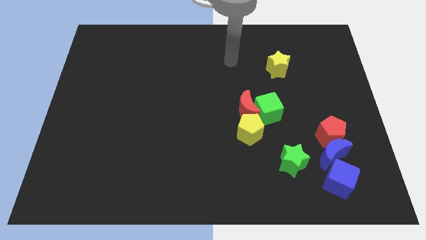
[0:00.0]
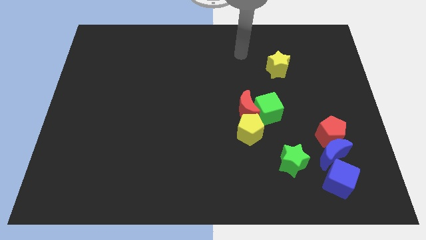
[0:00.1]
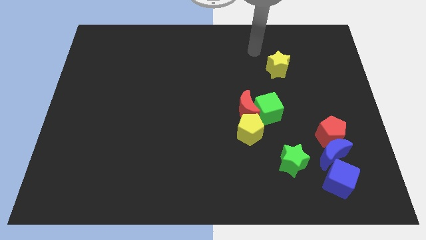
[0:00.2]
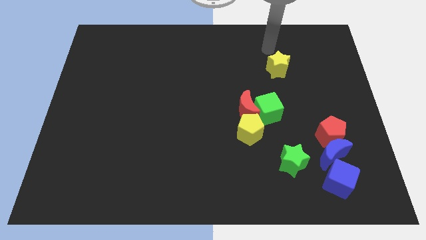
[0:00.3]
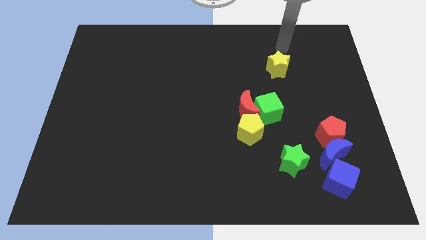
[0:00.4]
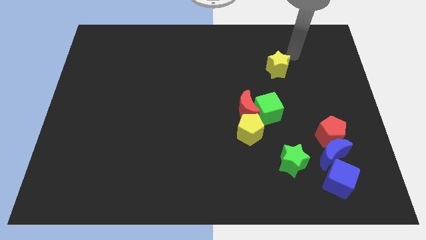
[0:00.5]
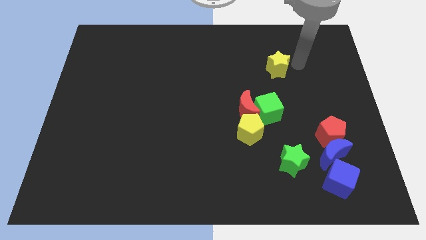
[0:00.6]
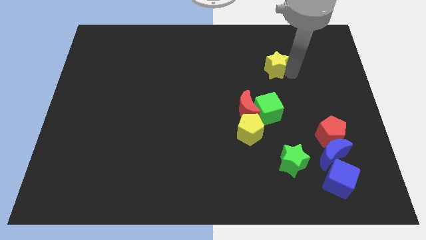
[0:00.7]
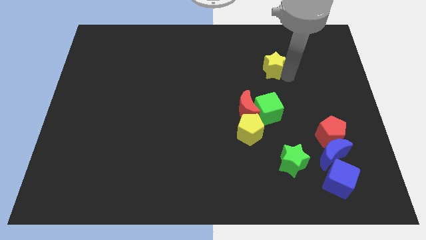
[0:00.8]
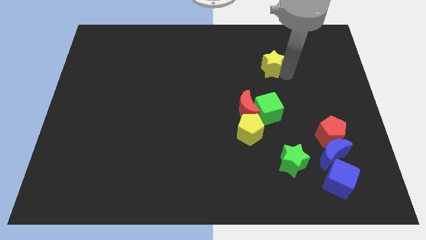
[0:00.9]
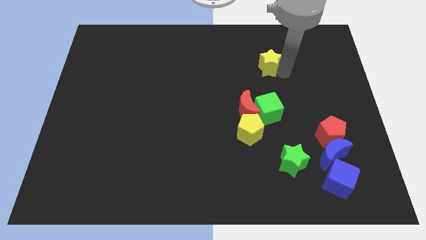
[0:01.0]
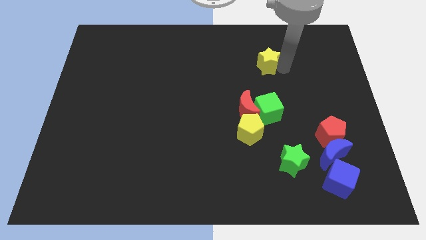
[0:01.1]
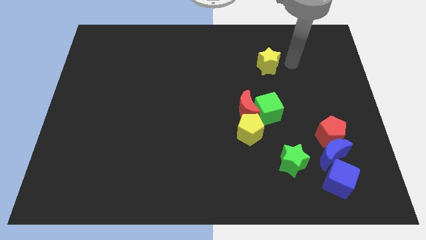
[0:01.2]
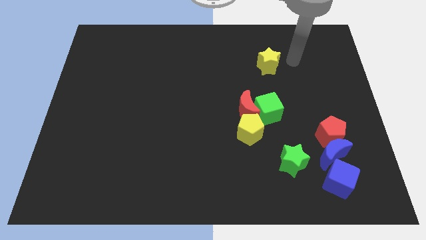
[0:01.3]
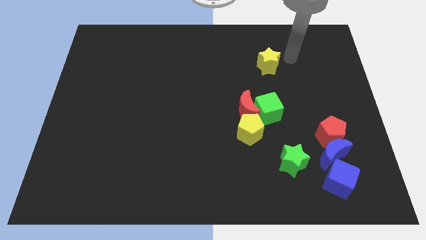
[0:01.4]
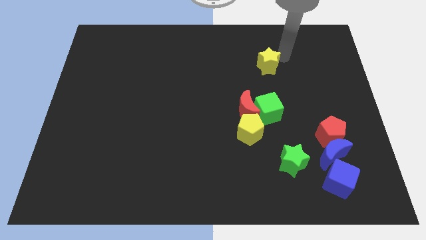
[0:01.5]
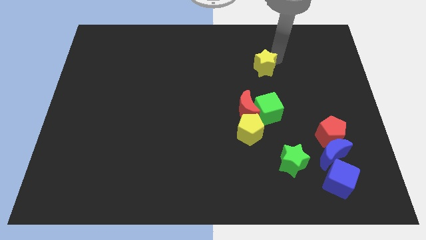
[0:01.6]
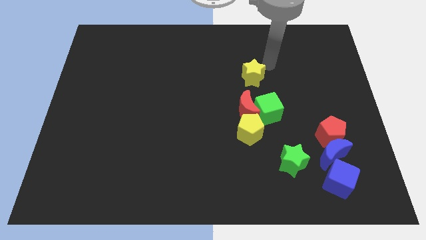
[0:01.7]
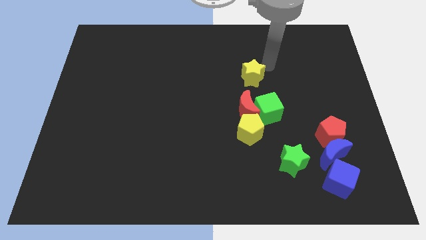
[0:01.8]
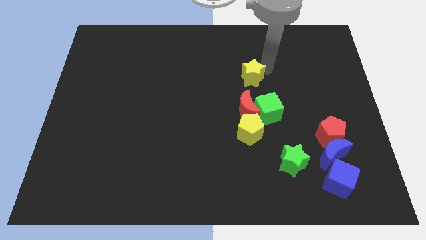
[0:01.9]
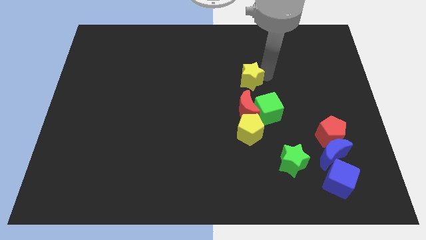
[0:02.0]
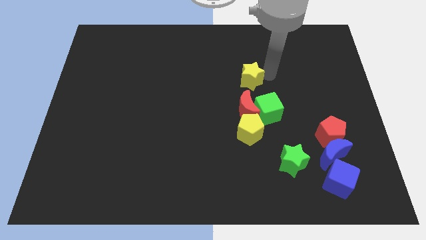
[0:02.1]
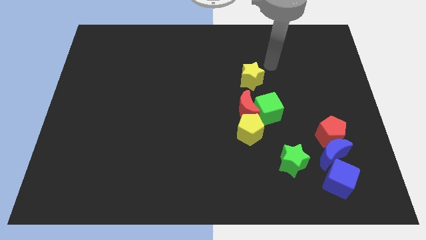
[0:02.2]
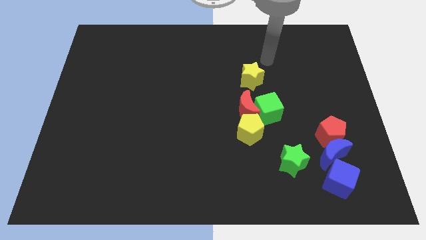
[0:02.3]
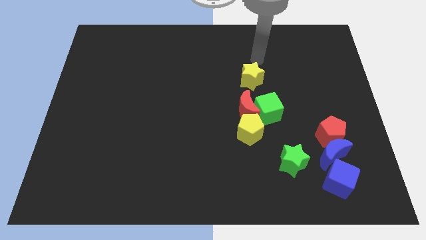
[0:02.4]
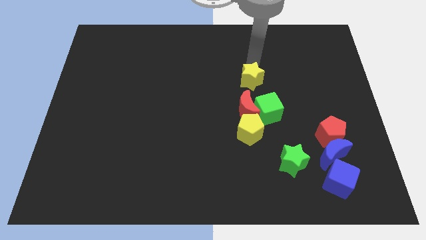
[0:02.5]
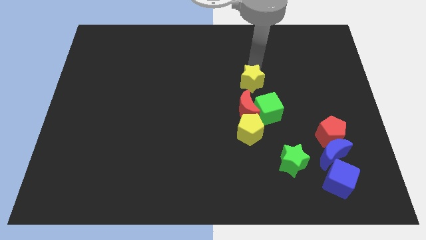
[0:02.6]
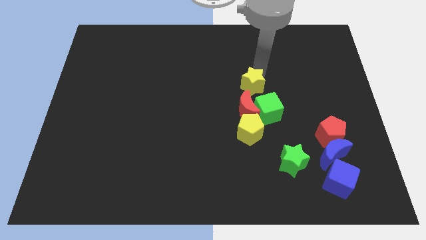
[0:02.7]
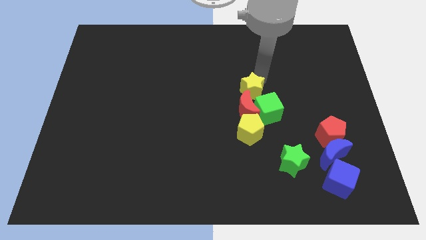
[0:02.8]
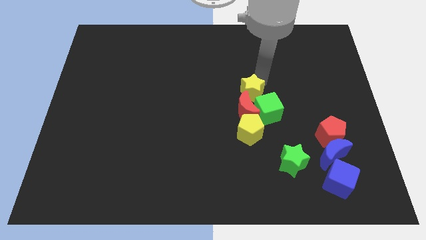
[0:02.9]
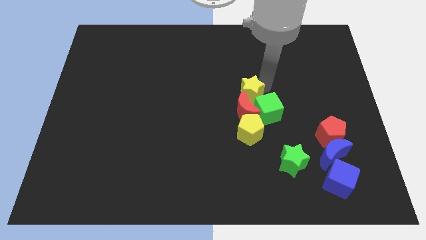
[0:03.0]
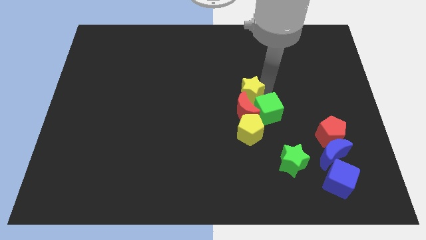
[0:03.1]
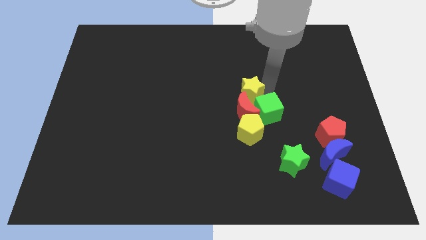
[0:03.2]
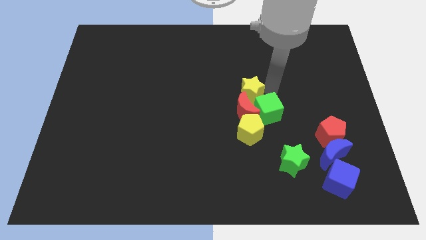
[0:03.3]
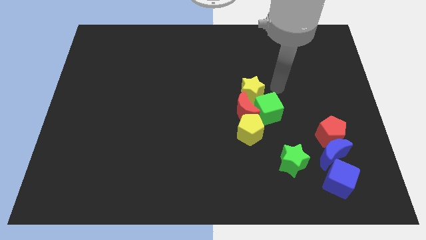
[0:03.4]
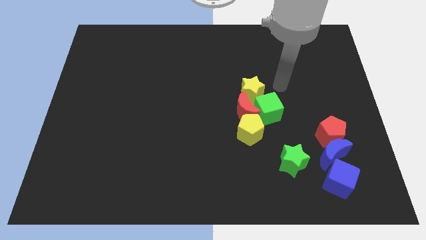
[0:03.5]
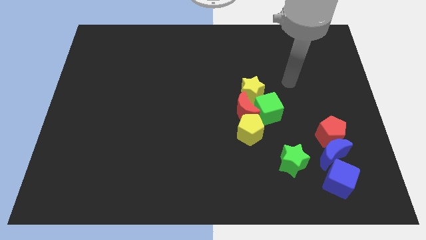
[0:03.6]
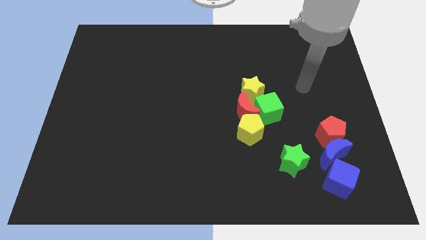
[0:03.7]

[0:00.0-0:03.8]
drag the yellow star above the red moon

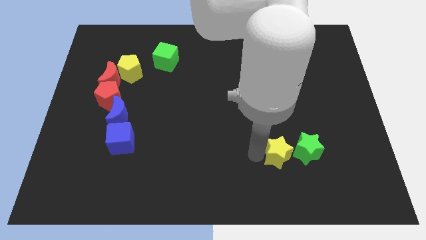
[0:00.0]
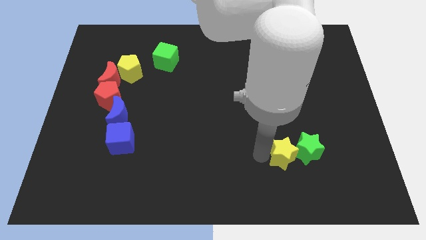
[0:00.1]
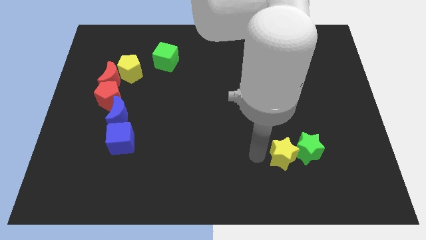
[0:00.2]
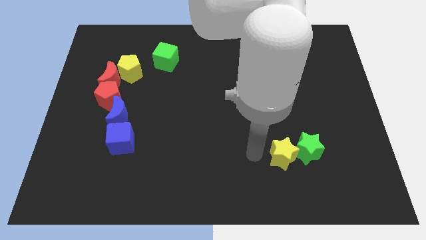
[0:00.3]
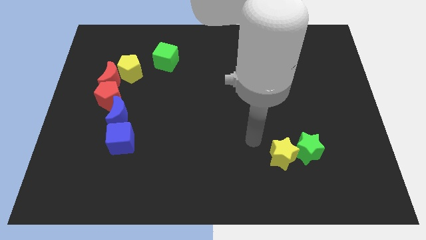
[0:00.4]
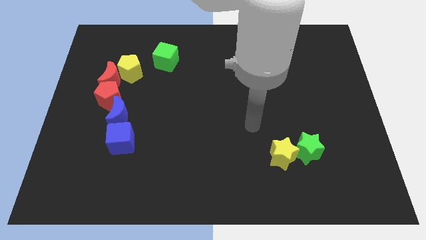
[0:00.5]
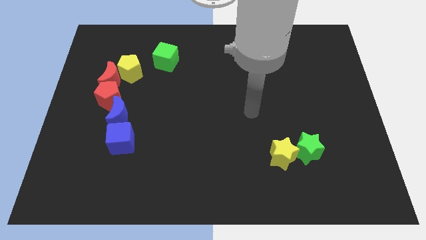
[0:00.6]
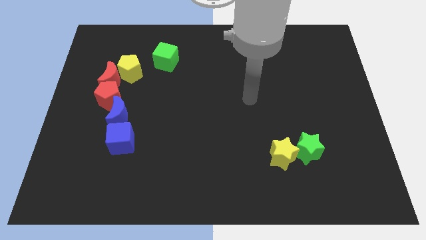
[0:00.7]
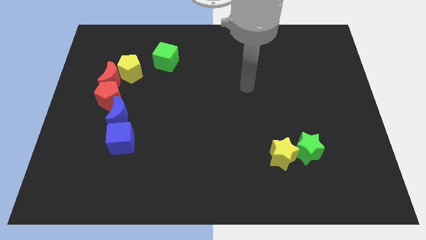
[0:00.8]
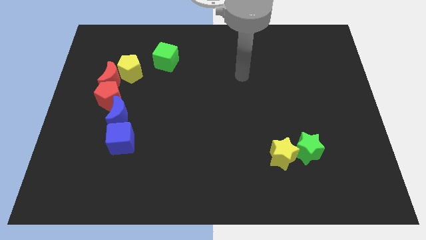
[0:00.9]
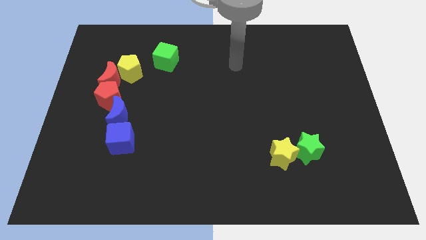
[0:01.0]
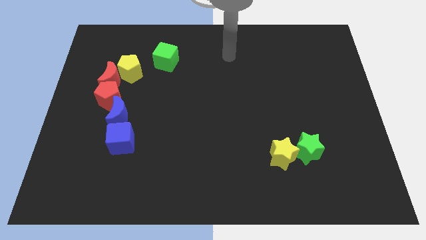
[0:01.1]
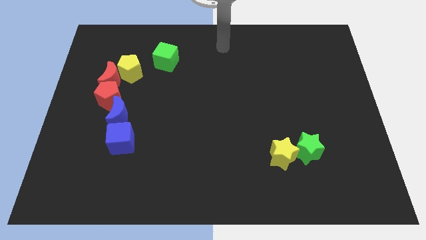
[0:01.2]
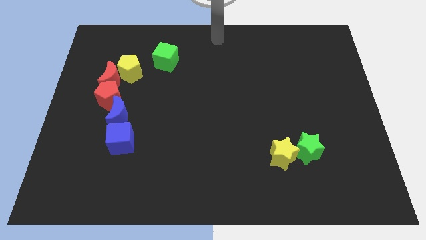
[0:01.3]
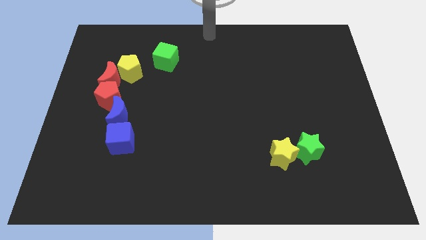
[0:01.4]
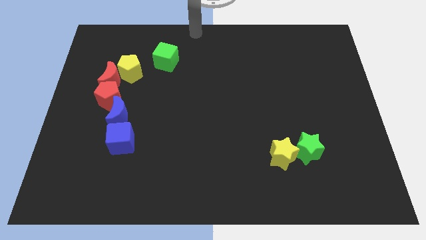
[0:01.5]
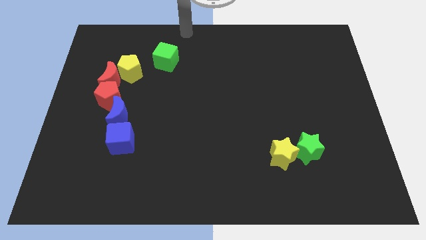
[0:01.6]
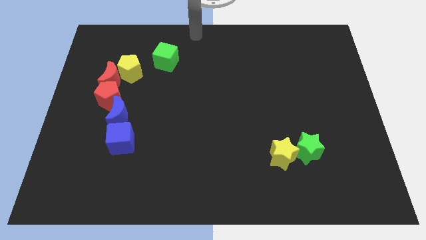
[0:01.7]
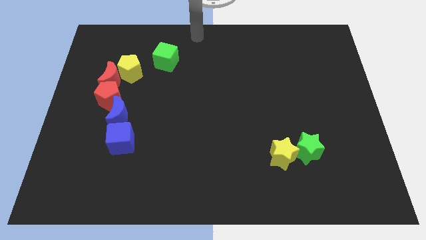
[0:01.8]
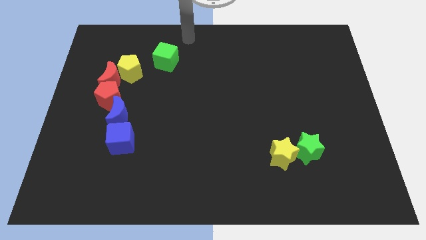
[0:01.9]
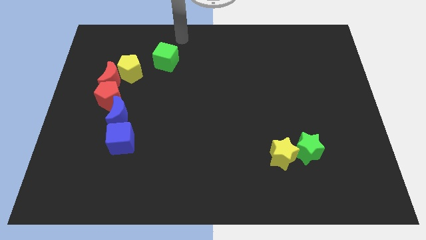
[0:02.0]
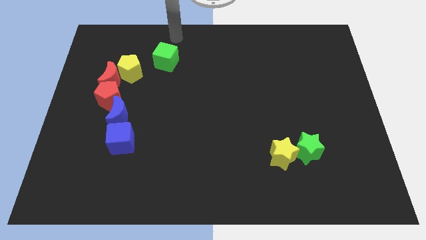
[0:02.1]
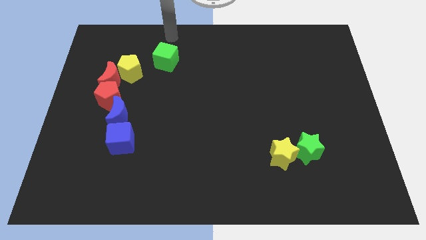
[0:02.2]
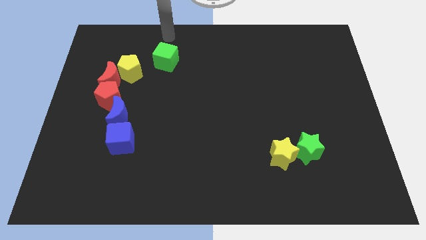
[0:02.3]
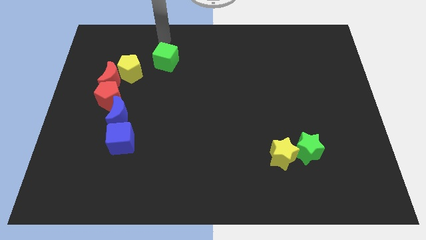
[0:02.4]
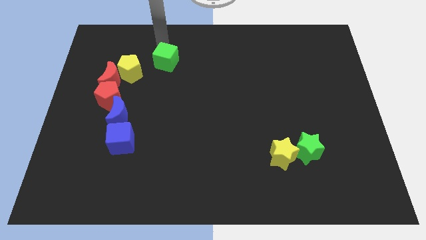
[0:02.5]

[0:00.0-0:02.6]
move the arm away from the yellow star

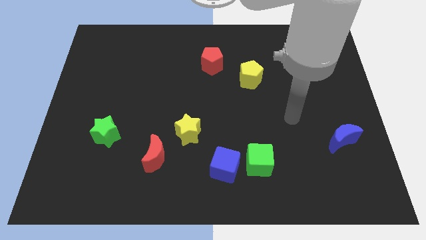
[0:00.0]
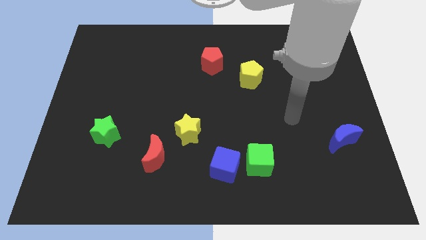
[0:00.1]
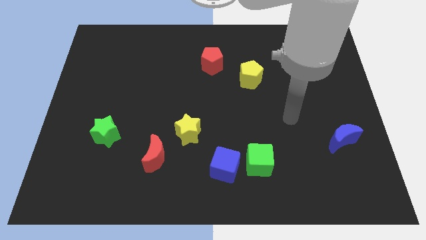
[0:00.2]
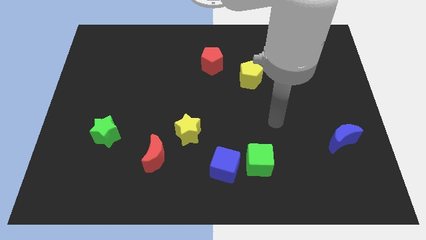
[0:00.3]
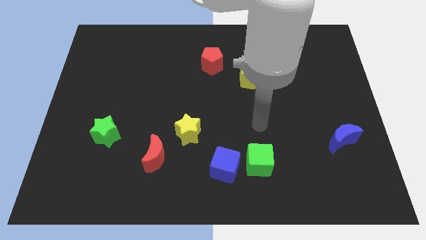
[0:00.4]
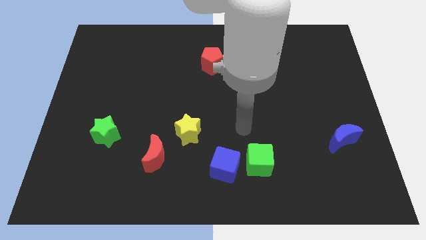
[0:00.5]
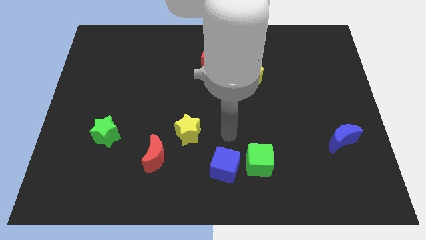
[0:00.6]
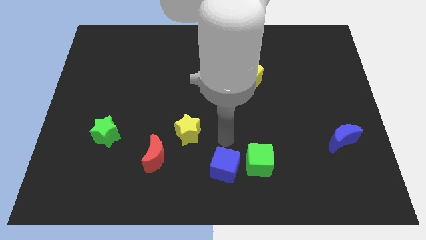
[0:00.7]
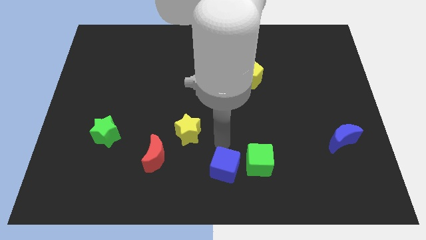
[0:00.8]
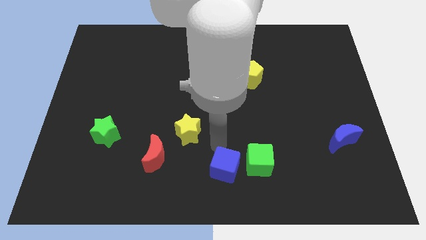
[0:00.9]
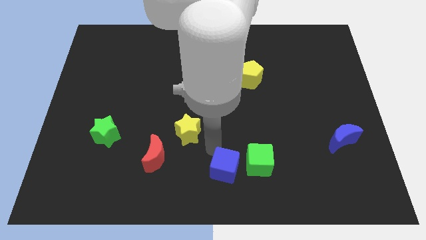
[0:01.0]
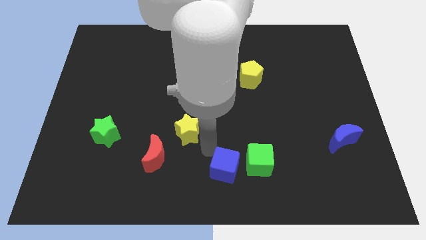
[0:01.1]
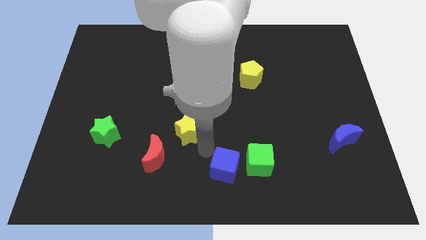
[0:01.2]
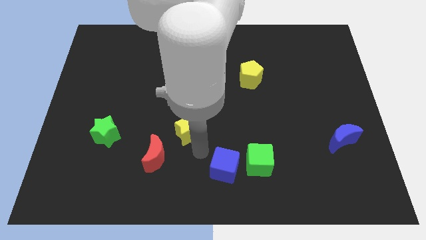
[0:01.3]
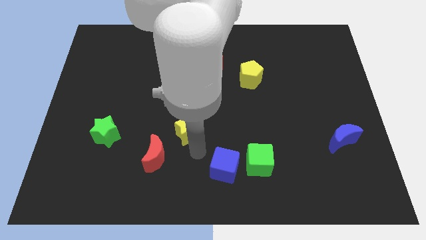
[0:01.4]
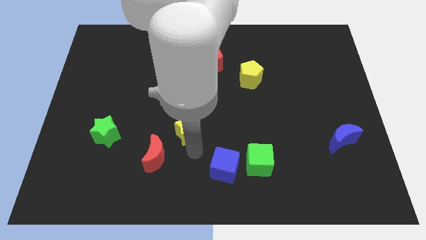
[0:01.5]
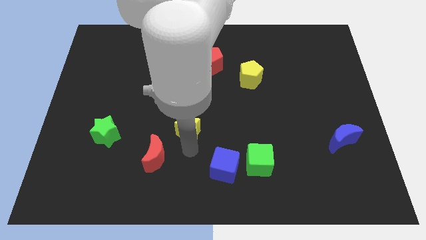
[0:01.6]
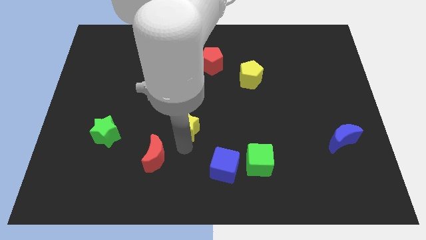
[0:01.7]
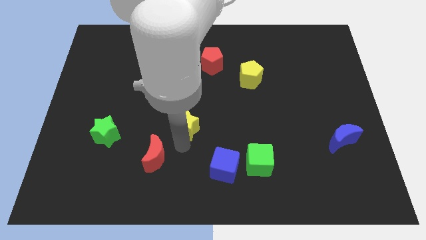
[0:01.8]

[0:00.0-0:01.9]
tap at the bottom of the yellow star

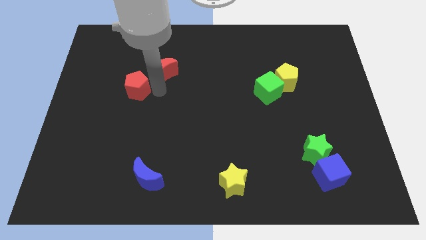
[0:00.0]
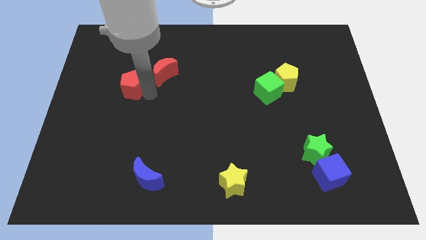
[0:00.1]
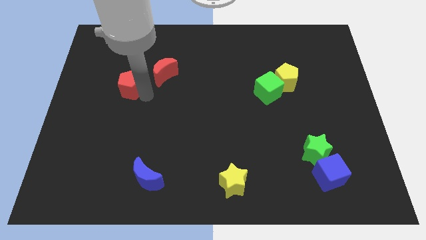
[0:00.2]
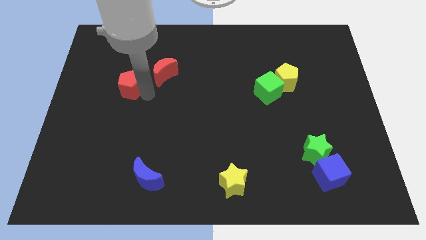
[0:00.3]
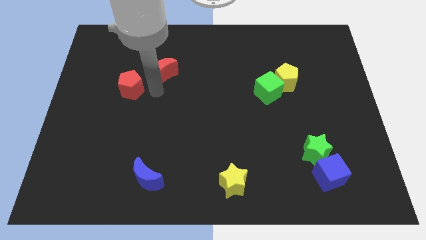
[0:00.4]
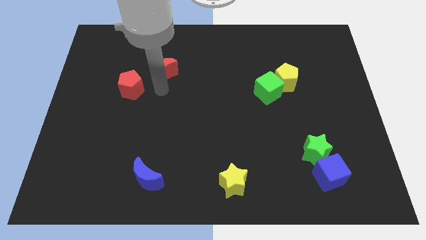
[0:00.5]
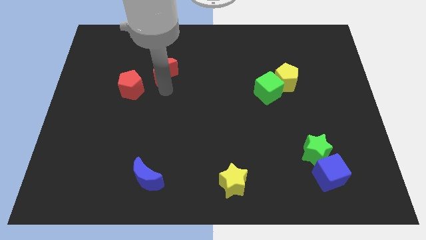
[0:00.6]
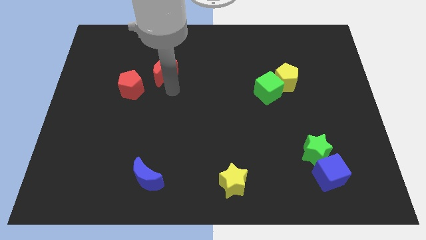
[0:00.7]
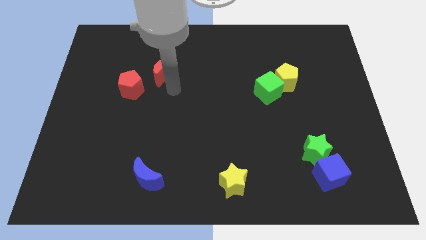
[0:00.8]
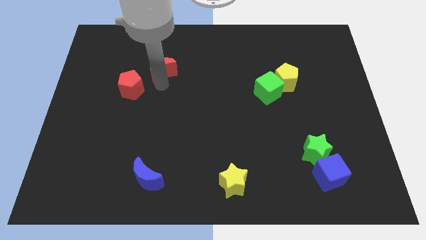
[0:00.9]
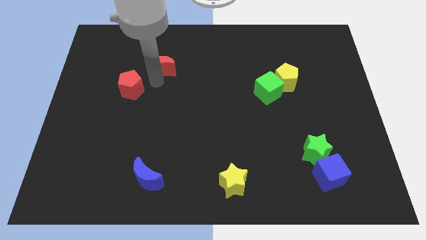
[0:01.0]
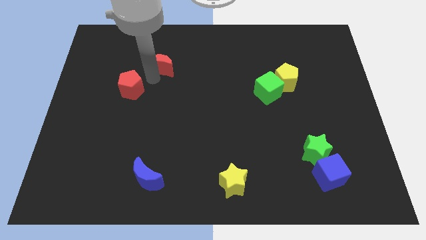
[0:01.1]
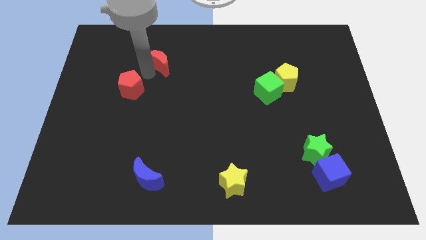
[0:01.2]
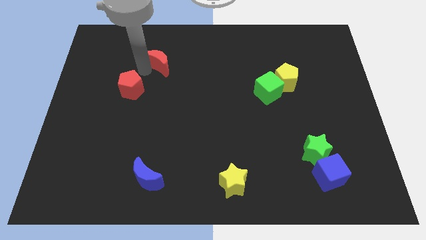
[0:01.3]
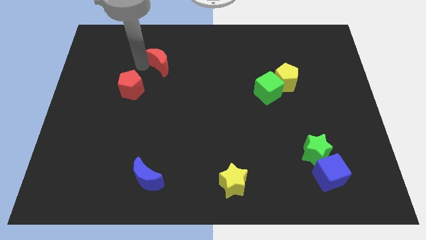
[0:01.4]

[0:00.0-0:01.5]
separate the red pentagon and red crescent
